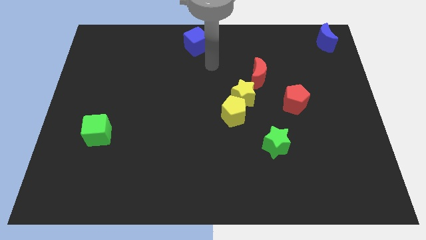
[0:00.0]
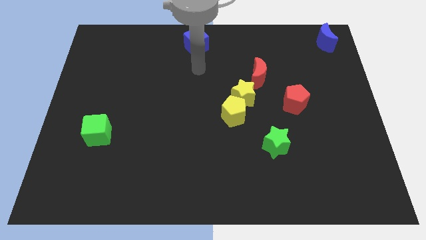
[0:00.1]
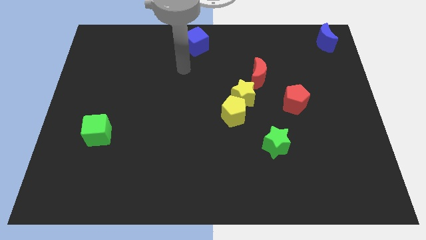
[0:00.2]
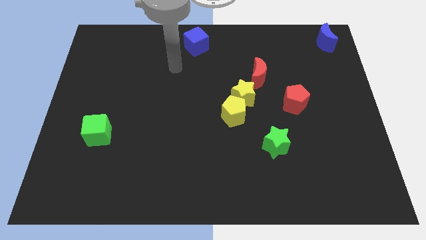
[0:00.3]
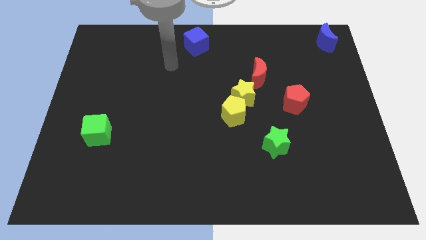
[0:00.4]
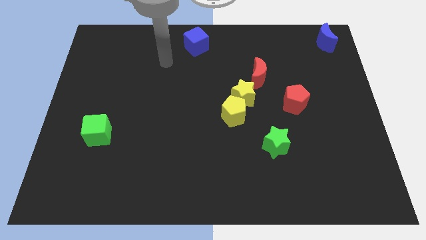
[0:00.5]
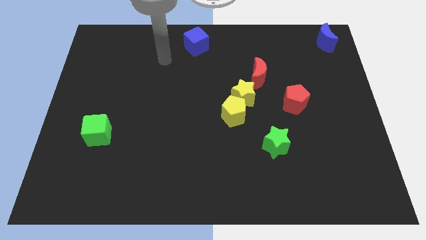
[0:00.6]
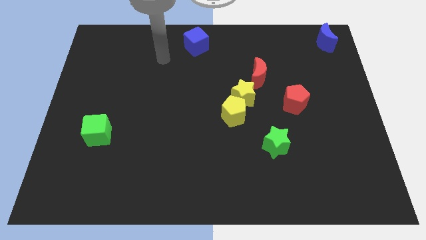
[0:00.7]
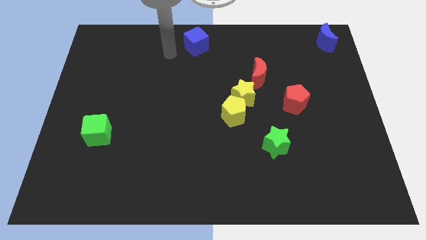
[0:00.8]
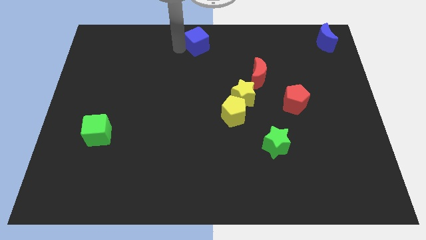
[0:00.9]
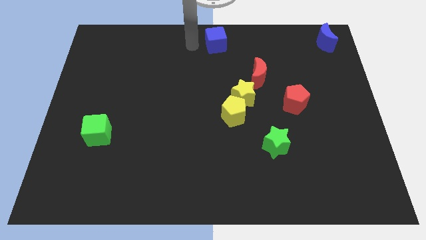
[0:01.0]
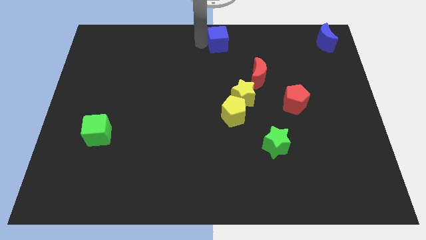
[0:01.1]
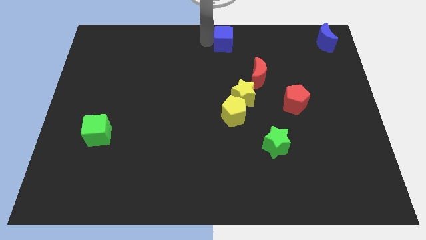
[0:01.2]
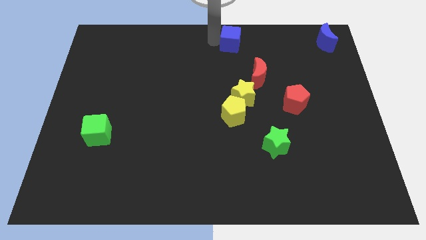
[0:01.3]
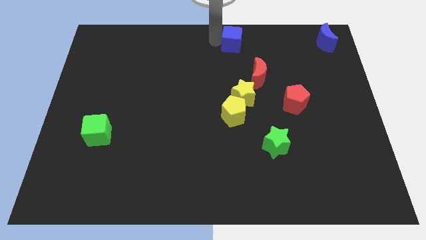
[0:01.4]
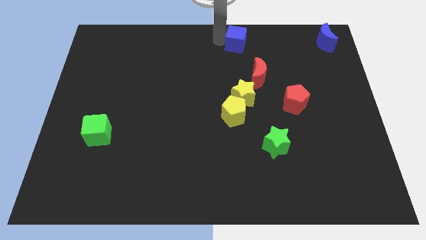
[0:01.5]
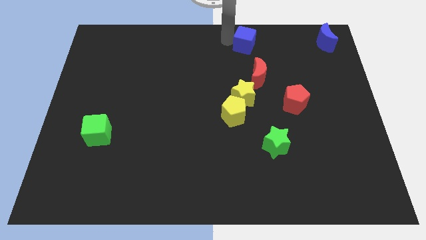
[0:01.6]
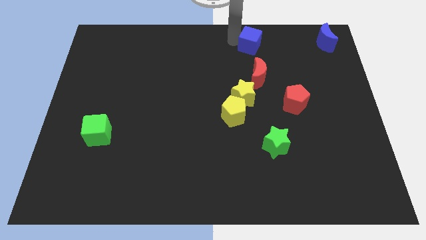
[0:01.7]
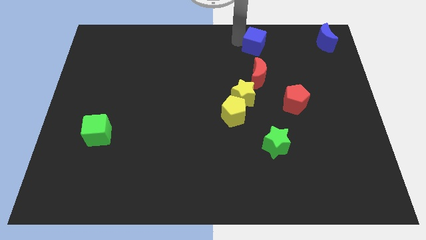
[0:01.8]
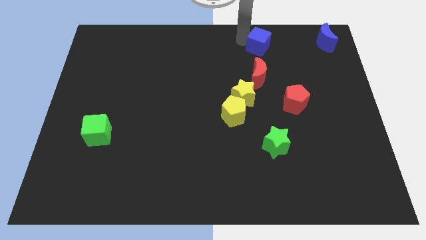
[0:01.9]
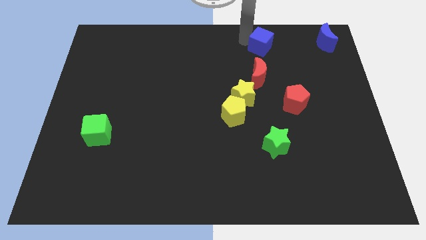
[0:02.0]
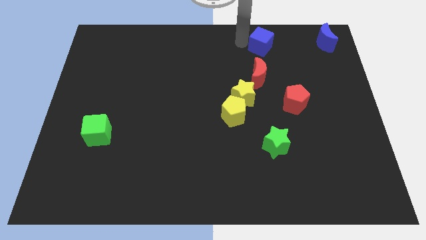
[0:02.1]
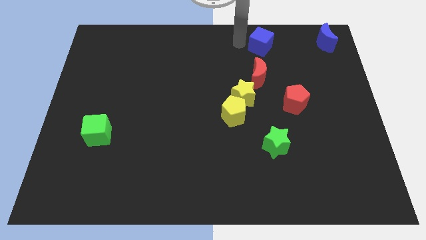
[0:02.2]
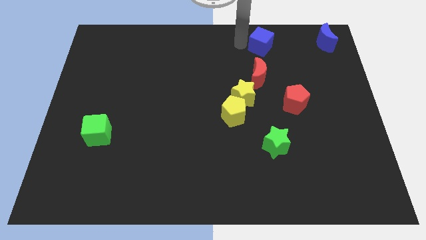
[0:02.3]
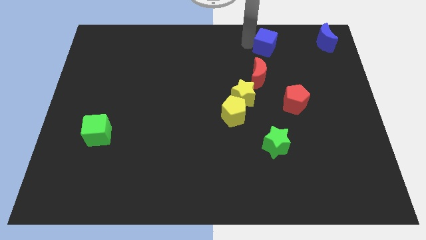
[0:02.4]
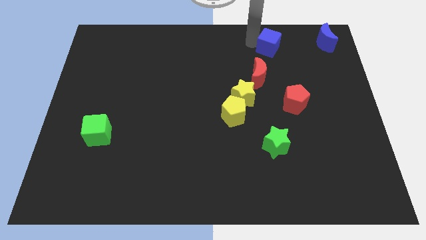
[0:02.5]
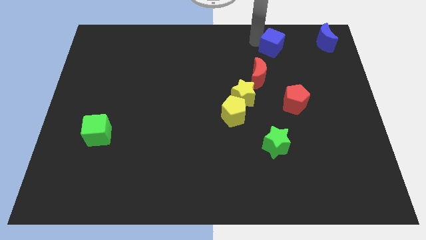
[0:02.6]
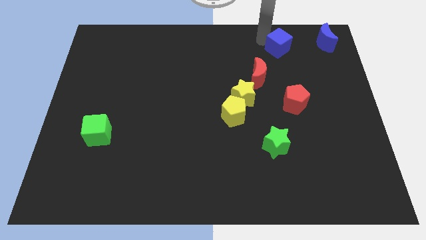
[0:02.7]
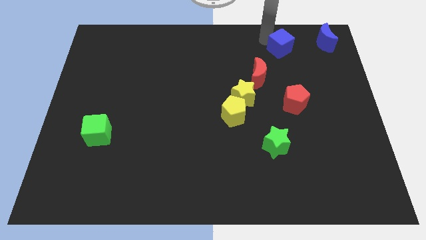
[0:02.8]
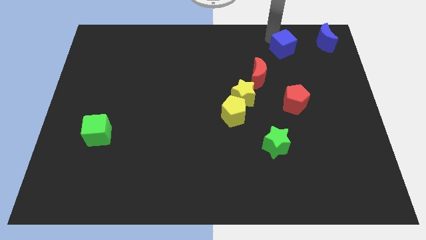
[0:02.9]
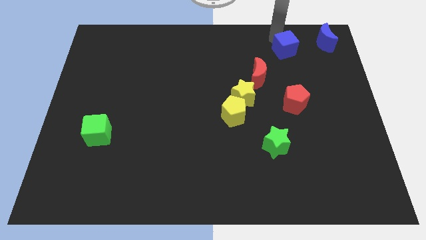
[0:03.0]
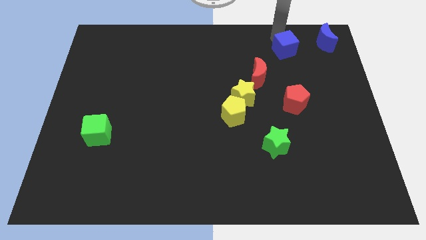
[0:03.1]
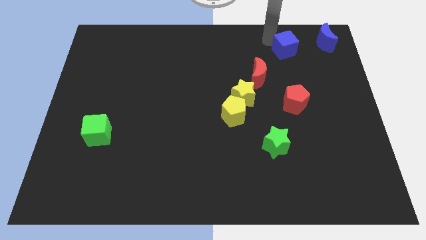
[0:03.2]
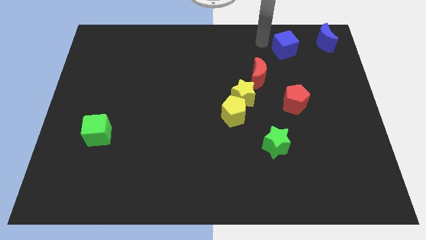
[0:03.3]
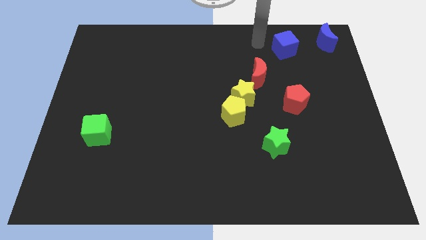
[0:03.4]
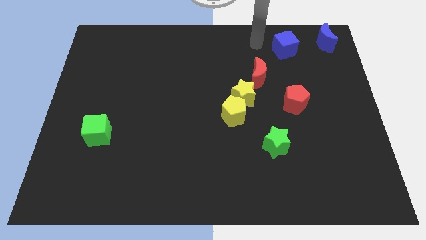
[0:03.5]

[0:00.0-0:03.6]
place the blue cube to the top right

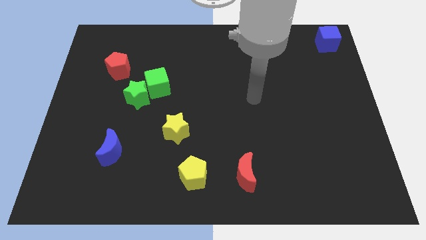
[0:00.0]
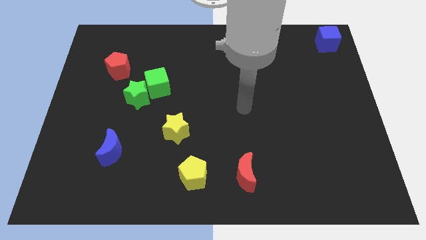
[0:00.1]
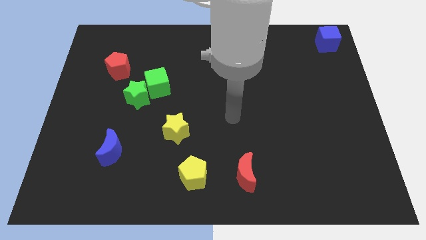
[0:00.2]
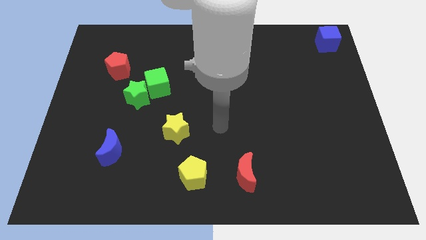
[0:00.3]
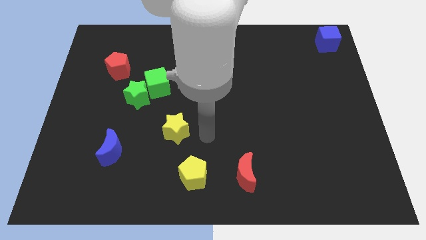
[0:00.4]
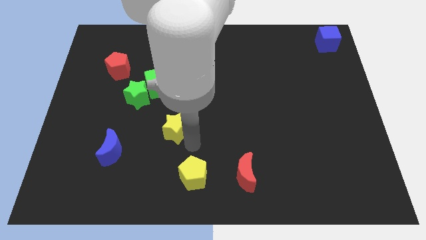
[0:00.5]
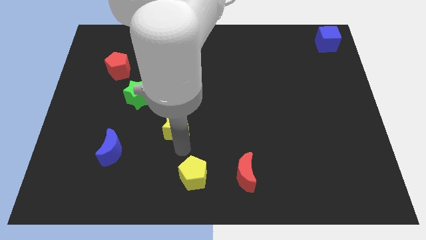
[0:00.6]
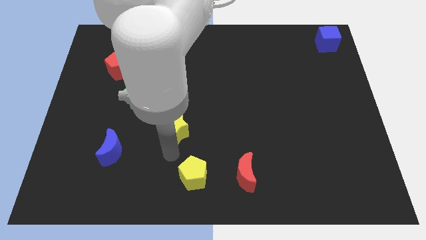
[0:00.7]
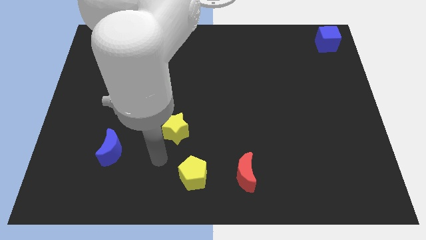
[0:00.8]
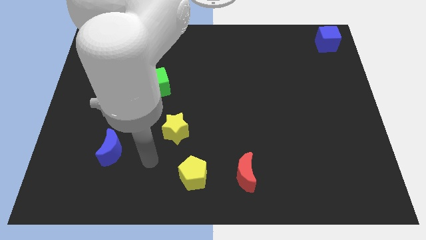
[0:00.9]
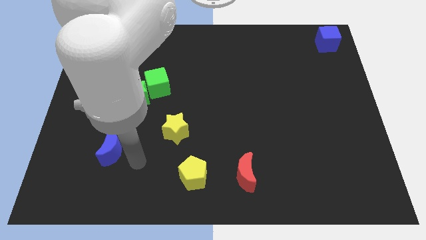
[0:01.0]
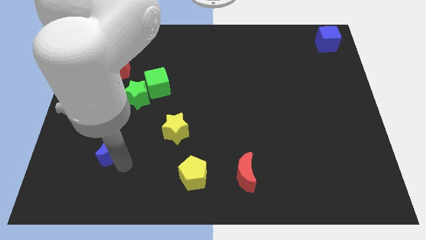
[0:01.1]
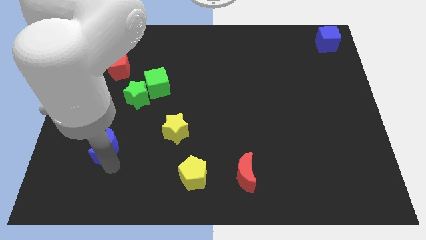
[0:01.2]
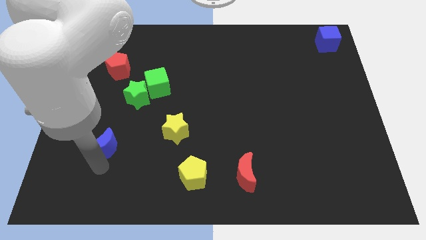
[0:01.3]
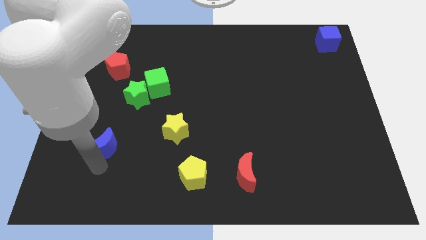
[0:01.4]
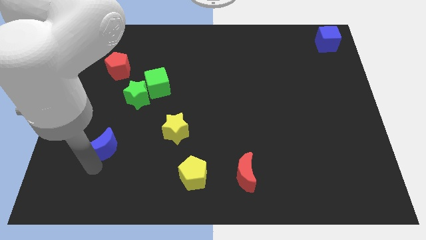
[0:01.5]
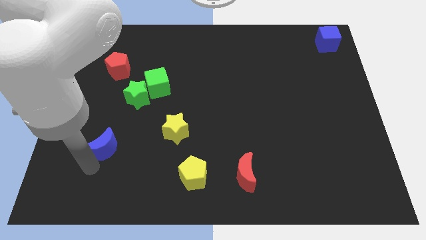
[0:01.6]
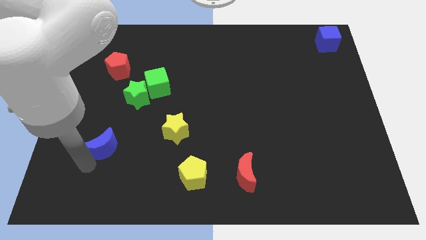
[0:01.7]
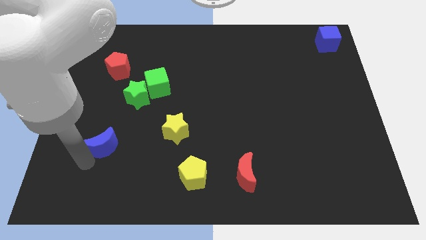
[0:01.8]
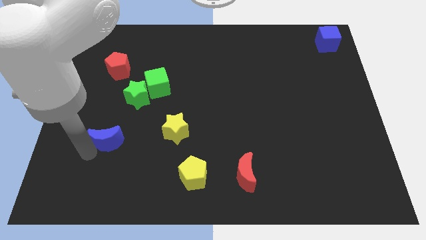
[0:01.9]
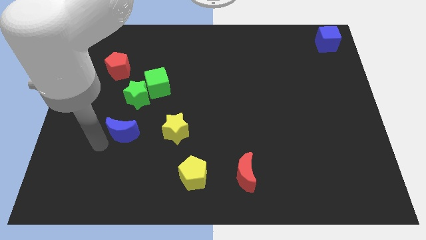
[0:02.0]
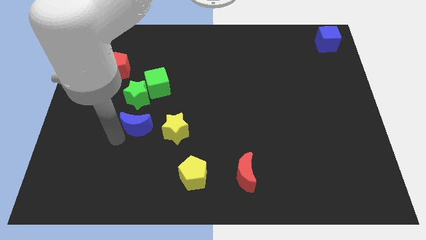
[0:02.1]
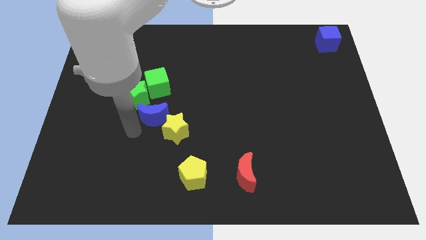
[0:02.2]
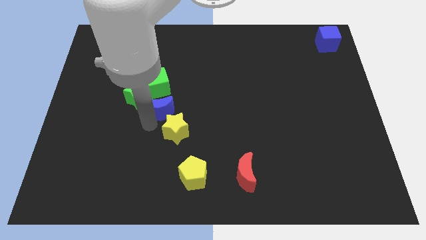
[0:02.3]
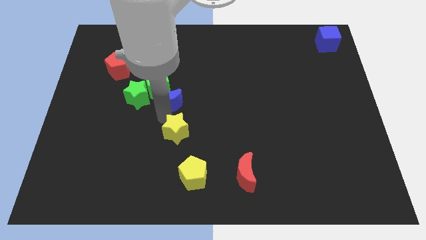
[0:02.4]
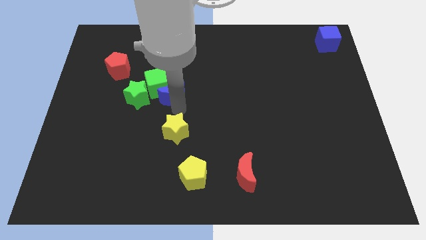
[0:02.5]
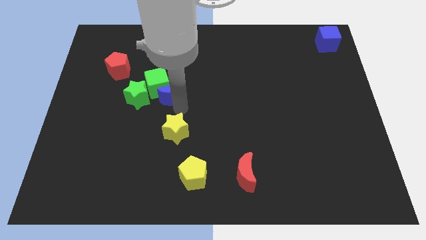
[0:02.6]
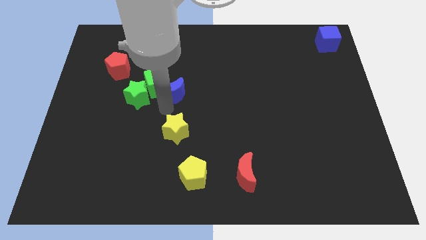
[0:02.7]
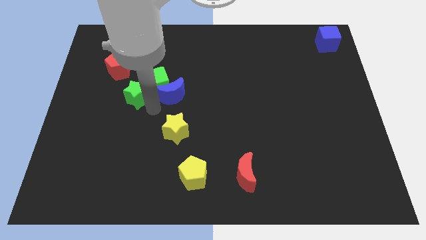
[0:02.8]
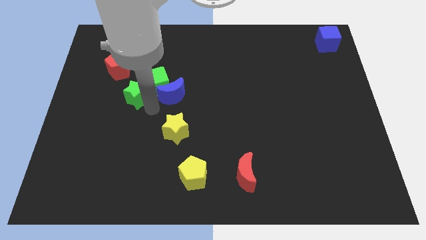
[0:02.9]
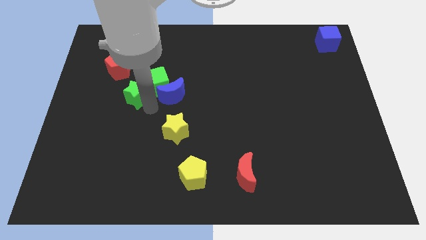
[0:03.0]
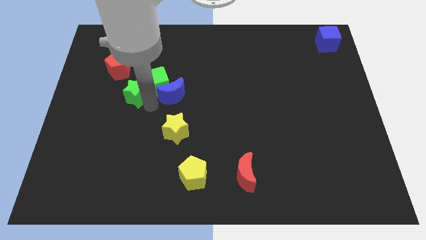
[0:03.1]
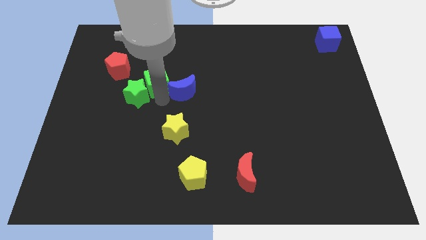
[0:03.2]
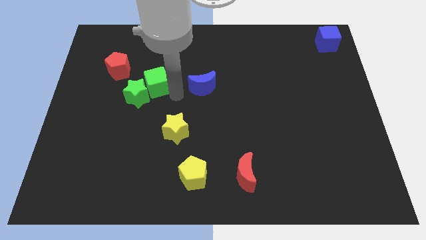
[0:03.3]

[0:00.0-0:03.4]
move the blue moon to the center

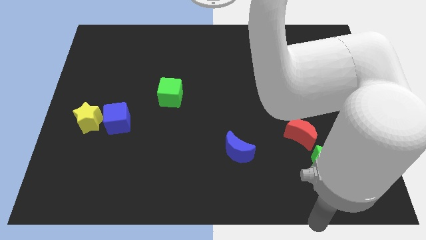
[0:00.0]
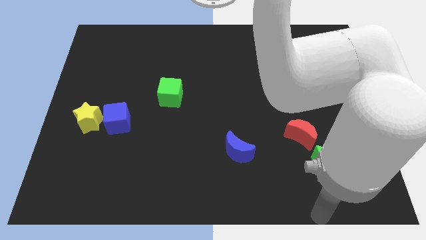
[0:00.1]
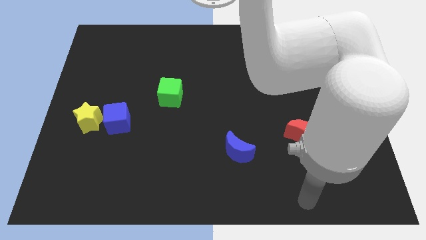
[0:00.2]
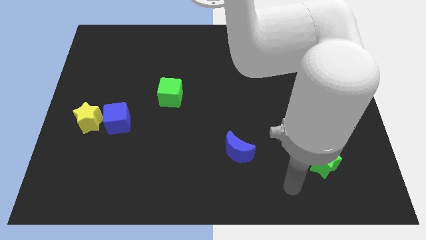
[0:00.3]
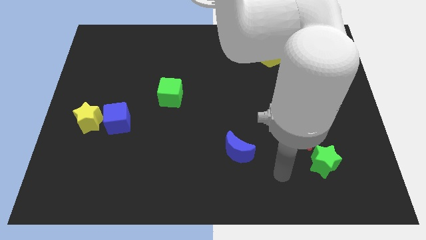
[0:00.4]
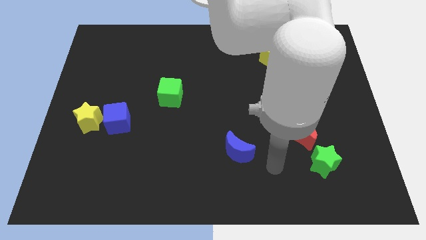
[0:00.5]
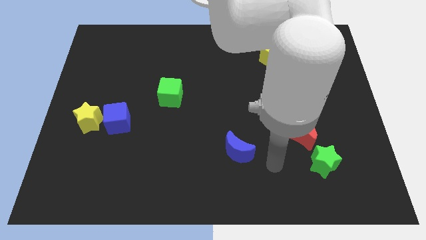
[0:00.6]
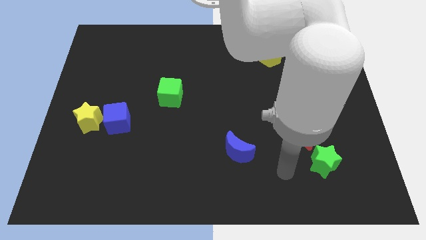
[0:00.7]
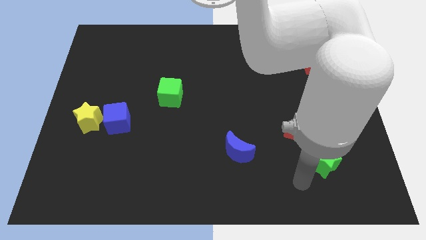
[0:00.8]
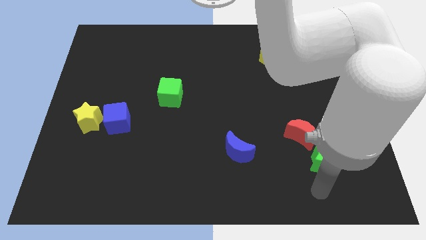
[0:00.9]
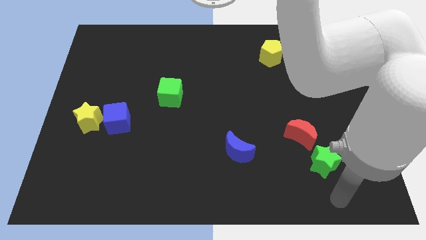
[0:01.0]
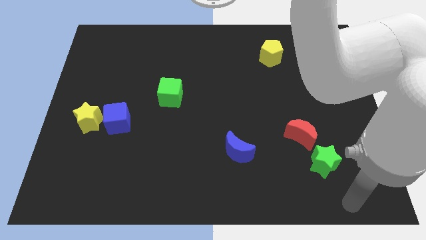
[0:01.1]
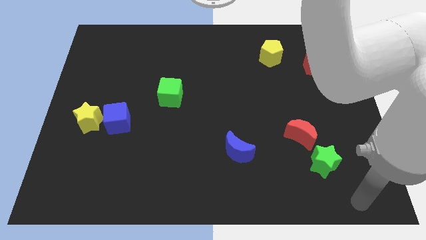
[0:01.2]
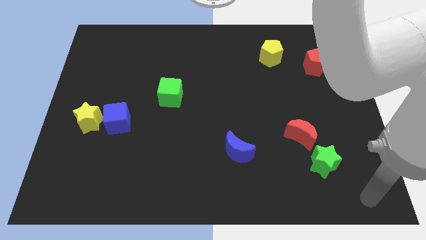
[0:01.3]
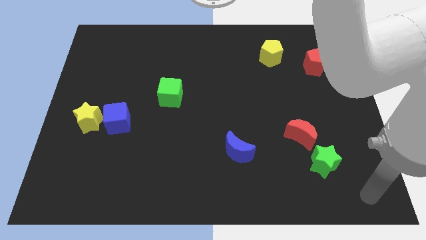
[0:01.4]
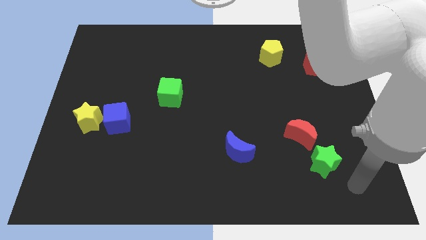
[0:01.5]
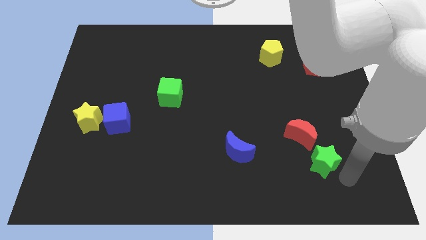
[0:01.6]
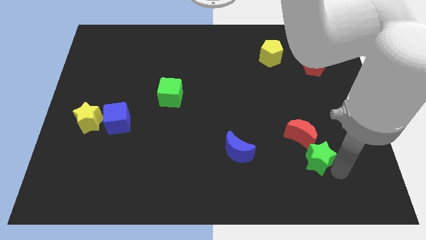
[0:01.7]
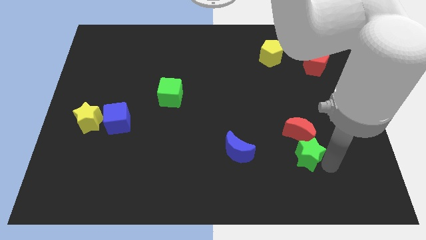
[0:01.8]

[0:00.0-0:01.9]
move the green star into red crescent
